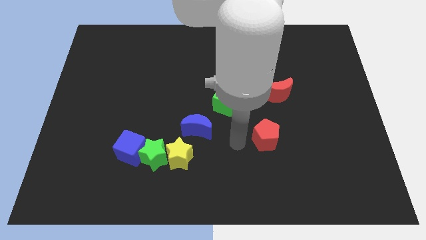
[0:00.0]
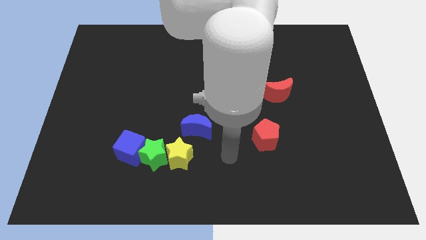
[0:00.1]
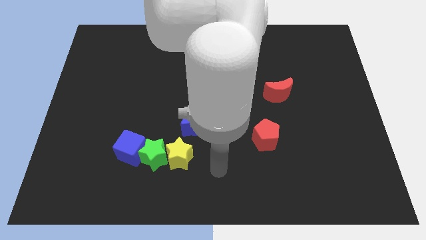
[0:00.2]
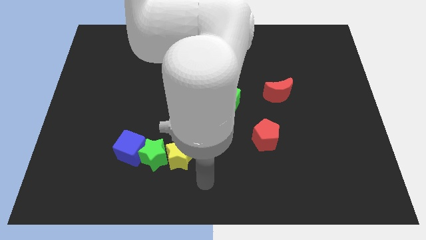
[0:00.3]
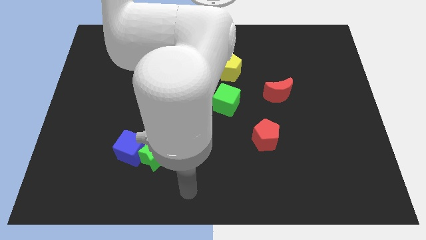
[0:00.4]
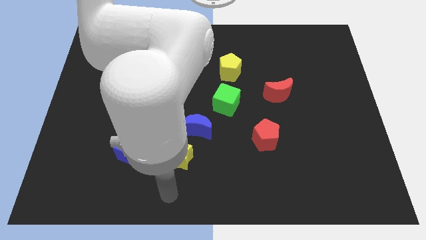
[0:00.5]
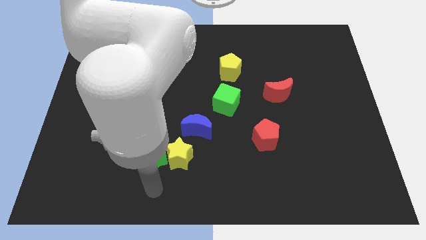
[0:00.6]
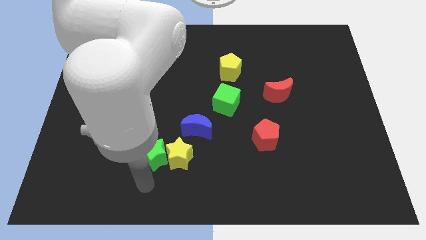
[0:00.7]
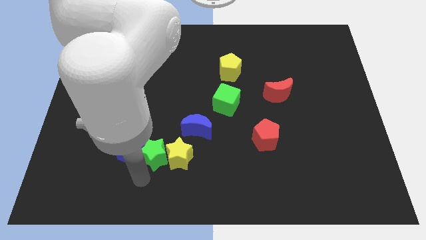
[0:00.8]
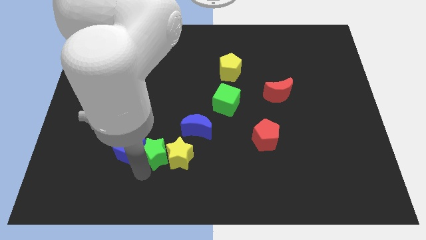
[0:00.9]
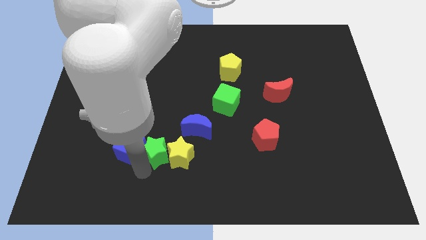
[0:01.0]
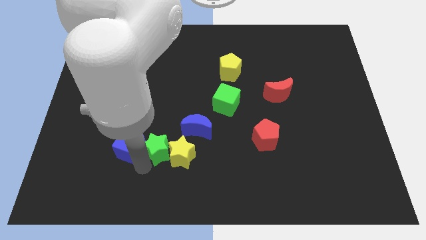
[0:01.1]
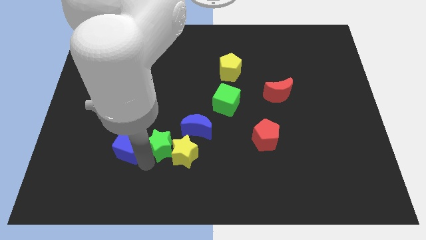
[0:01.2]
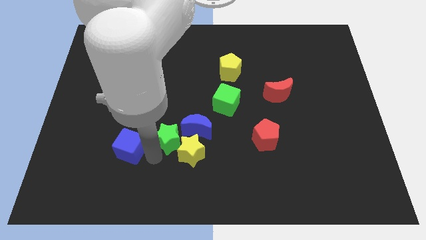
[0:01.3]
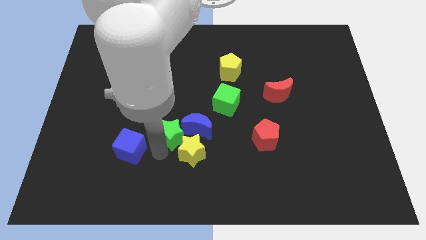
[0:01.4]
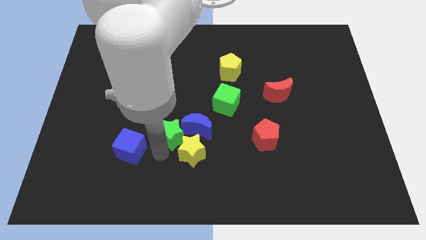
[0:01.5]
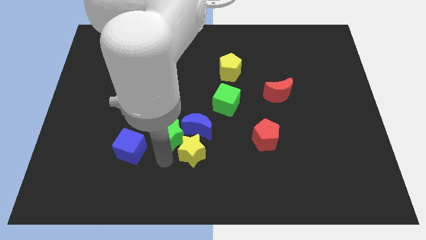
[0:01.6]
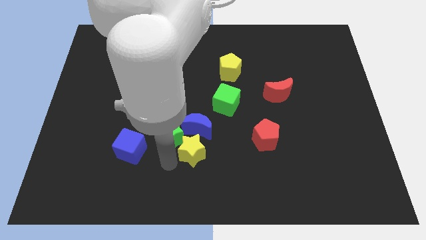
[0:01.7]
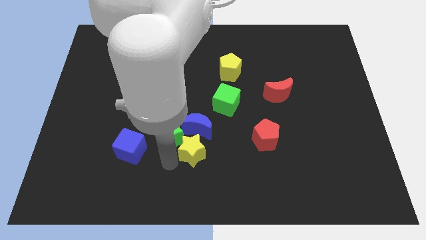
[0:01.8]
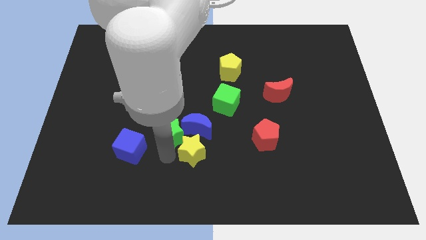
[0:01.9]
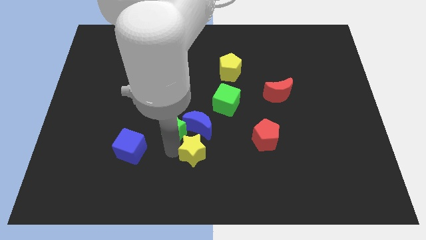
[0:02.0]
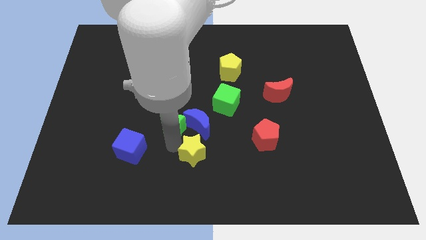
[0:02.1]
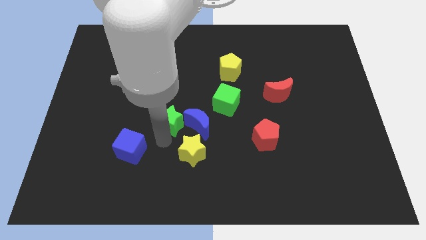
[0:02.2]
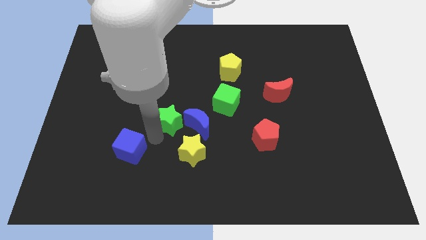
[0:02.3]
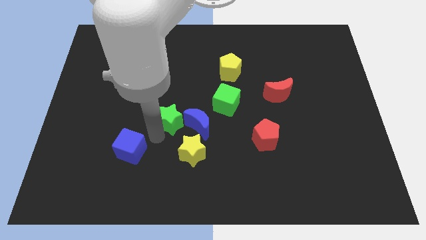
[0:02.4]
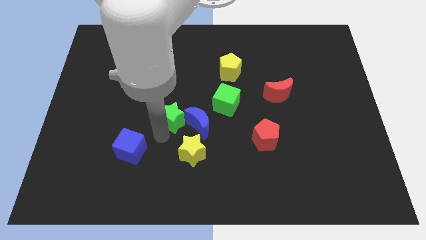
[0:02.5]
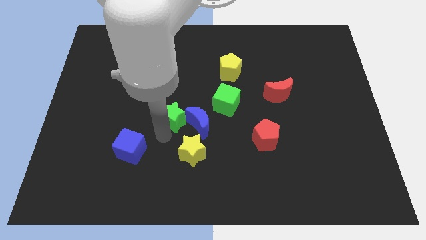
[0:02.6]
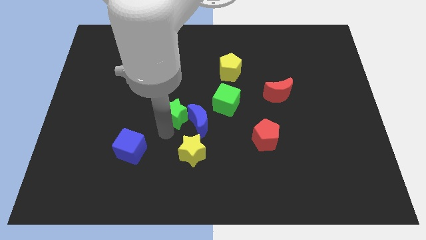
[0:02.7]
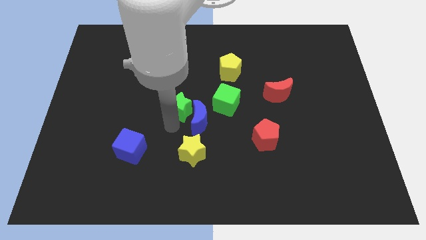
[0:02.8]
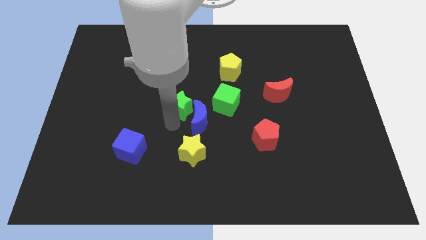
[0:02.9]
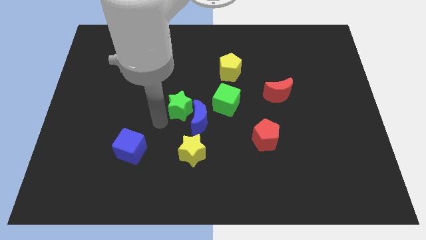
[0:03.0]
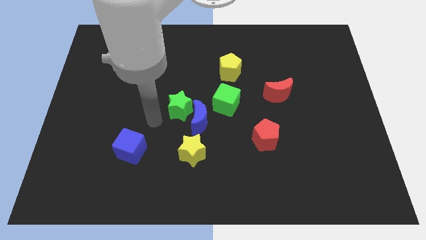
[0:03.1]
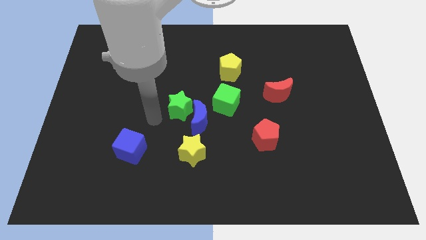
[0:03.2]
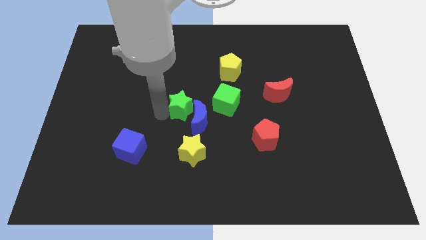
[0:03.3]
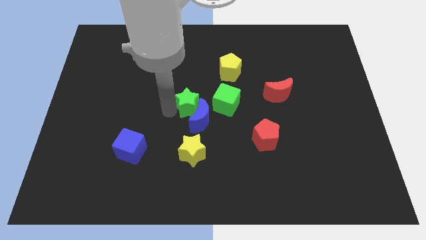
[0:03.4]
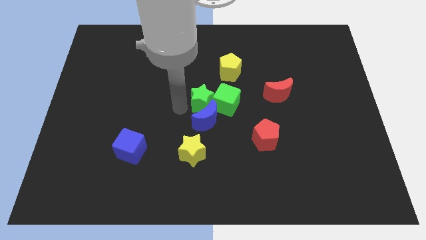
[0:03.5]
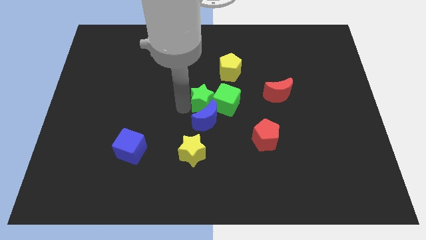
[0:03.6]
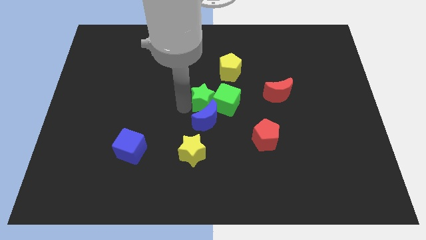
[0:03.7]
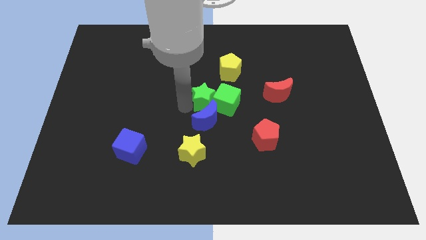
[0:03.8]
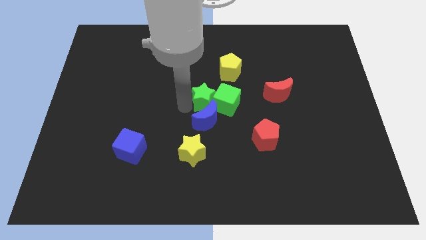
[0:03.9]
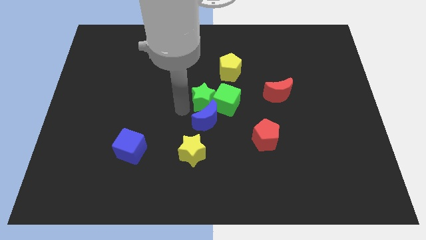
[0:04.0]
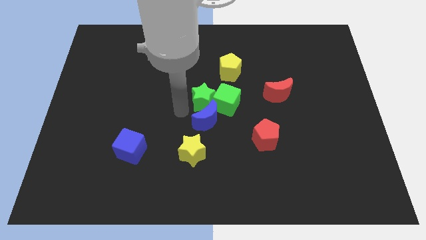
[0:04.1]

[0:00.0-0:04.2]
move the green star to the left of the green cube

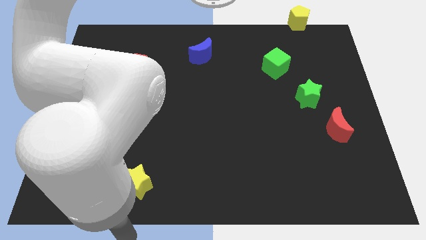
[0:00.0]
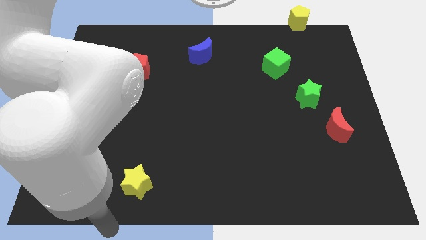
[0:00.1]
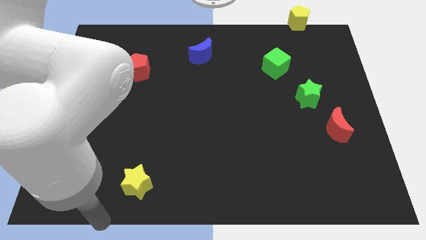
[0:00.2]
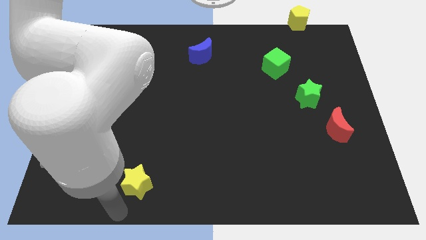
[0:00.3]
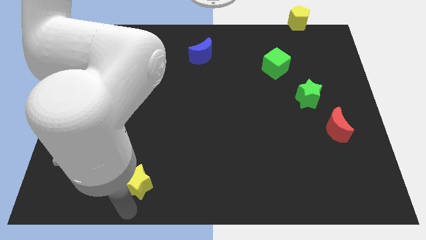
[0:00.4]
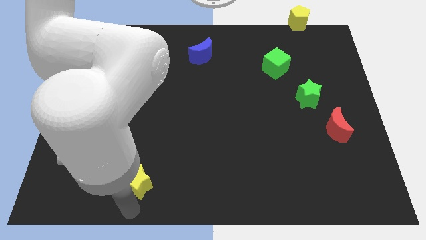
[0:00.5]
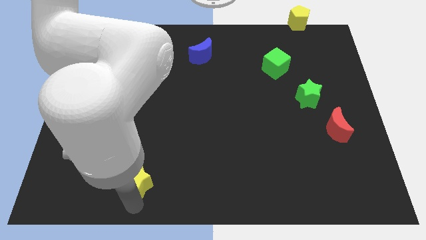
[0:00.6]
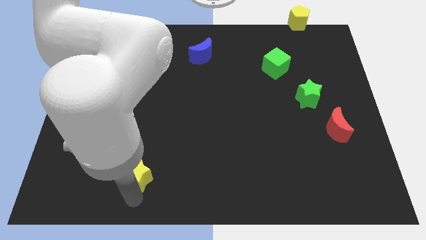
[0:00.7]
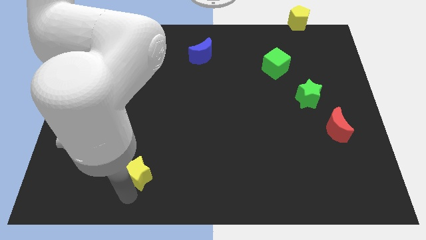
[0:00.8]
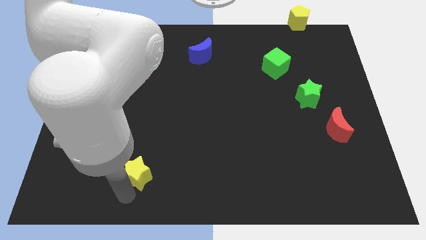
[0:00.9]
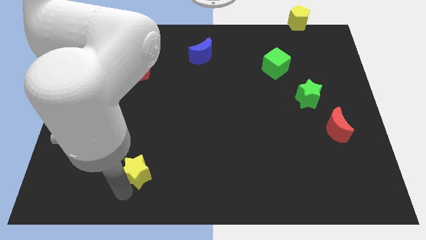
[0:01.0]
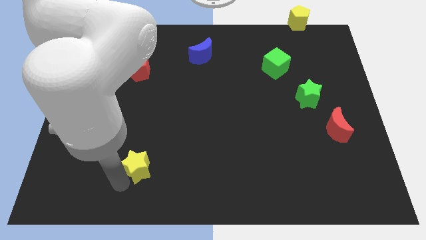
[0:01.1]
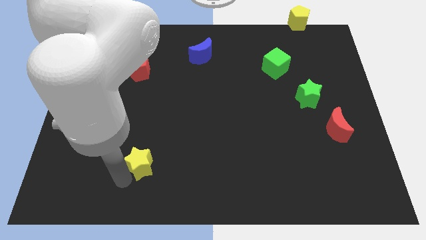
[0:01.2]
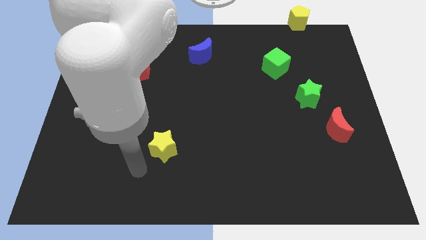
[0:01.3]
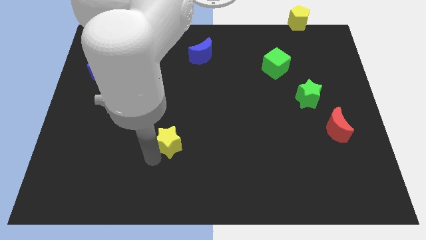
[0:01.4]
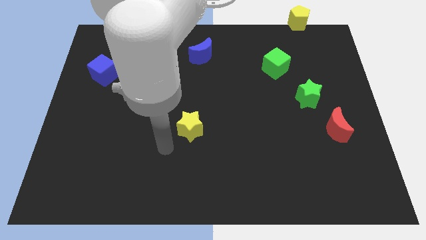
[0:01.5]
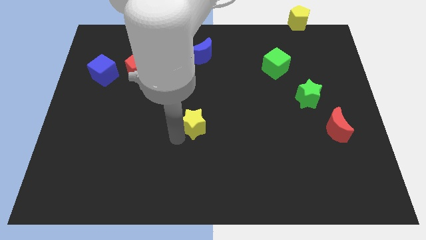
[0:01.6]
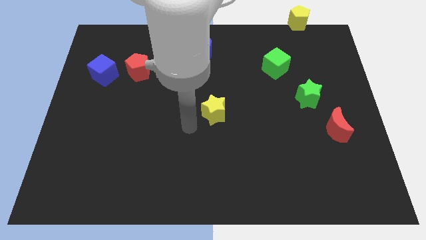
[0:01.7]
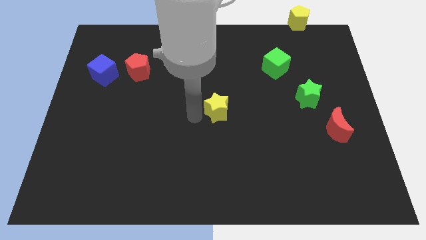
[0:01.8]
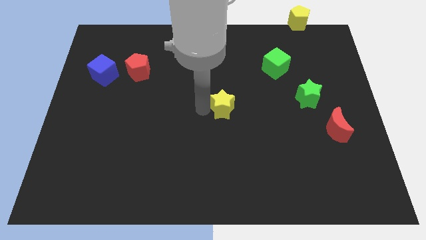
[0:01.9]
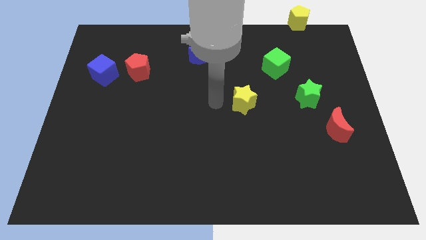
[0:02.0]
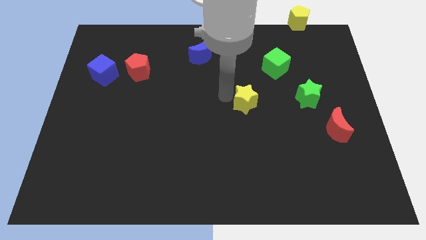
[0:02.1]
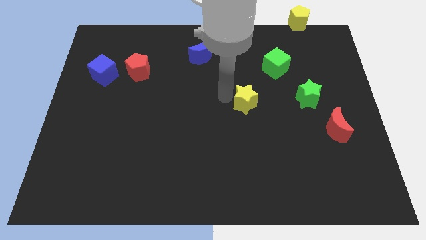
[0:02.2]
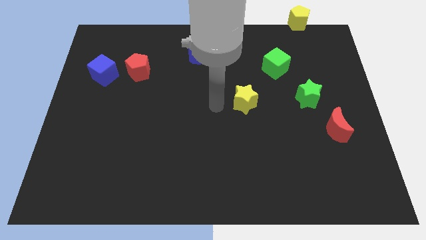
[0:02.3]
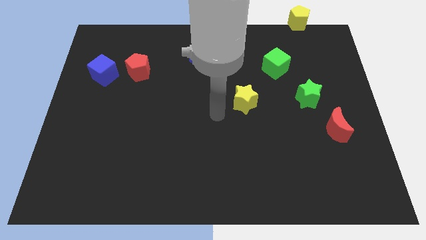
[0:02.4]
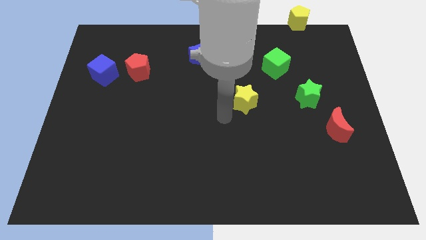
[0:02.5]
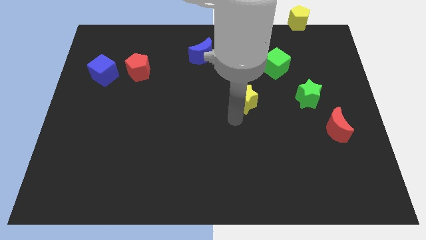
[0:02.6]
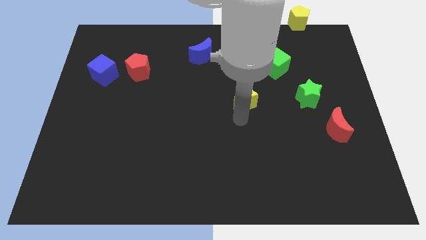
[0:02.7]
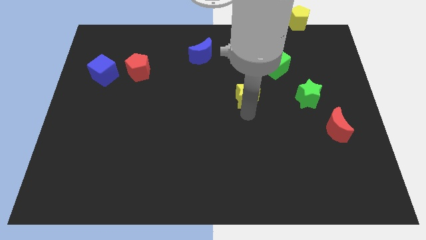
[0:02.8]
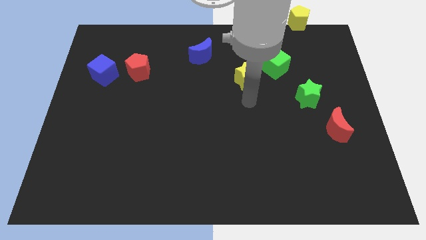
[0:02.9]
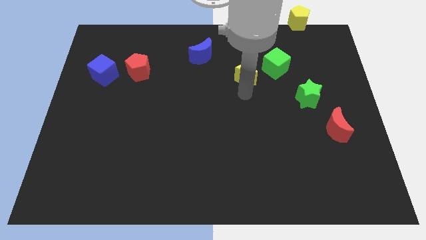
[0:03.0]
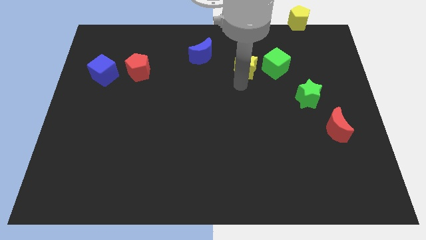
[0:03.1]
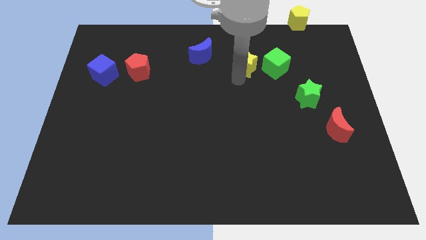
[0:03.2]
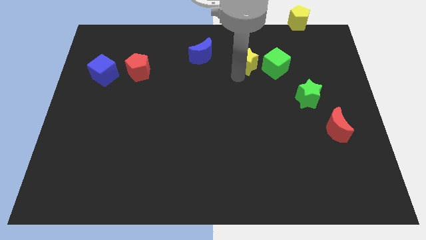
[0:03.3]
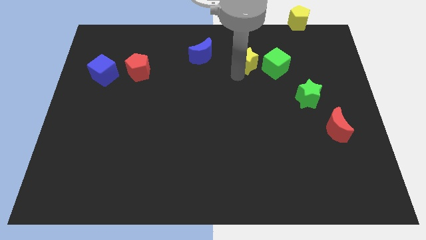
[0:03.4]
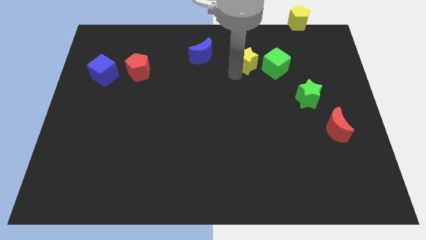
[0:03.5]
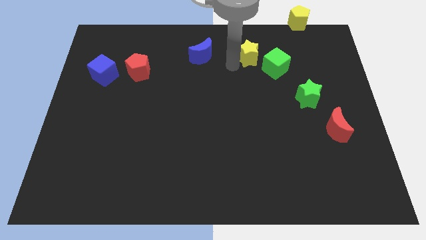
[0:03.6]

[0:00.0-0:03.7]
move the yellow star to the left of the green cube

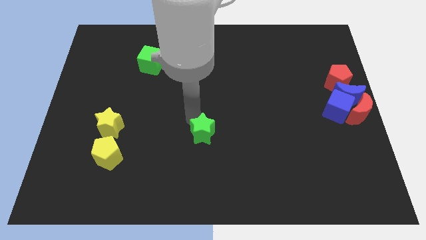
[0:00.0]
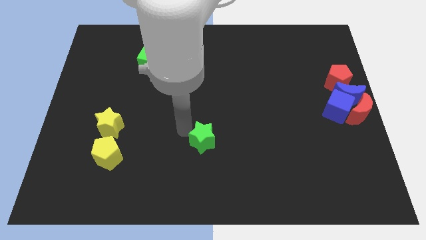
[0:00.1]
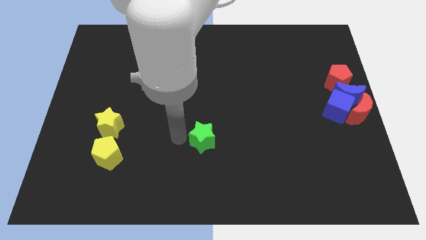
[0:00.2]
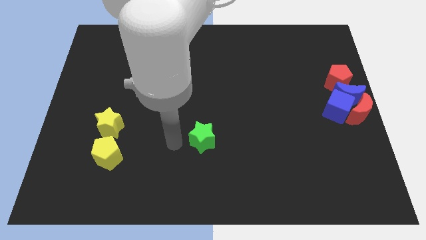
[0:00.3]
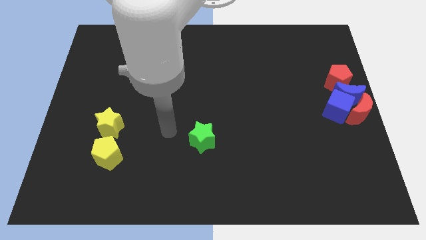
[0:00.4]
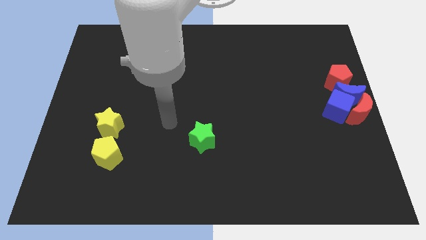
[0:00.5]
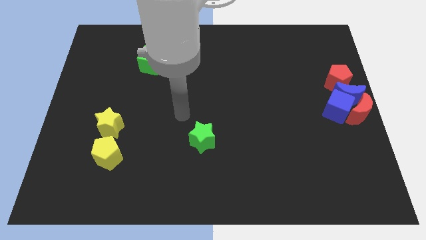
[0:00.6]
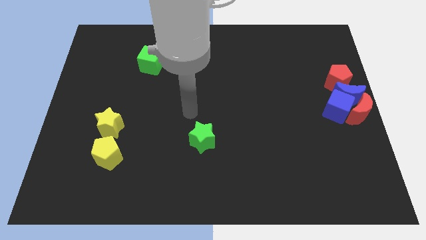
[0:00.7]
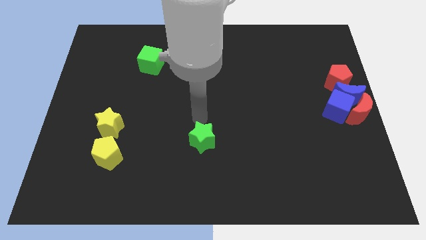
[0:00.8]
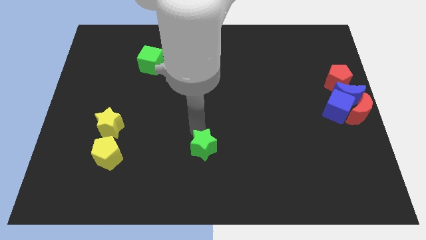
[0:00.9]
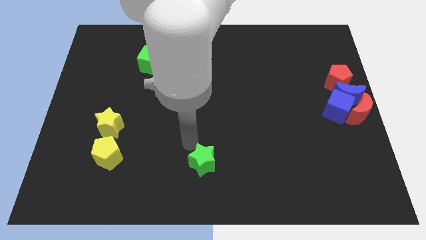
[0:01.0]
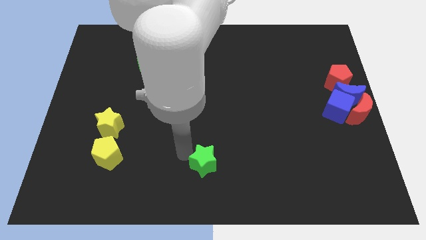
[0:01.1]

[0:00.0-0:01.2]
place the green star diagonally bottom right to the yellow star
